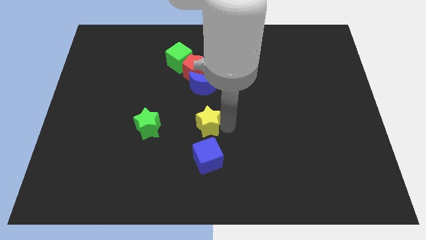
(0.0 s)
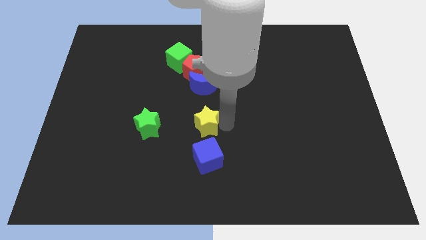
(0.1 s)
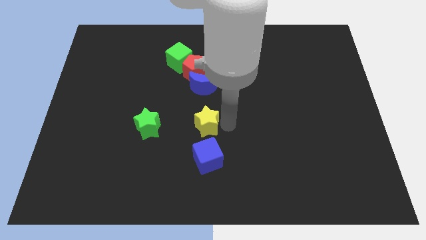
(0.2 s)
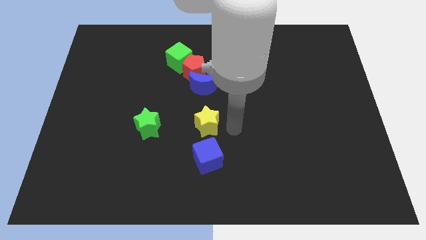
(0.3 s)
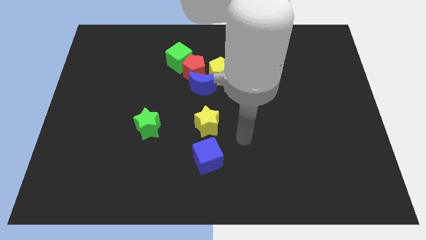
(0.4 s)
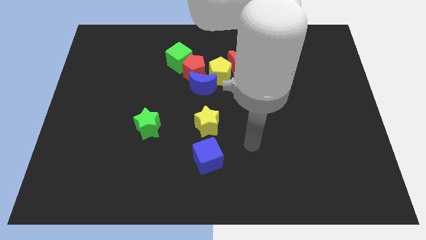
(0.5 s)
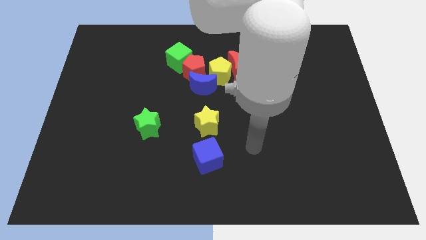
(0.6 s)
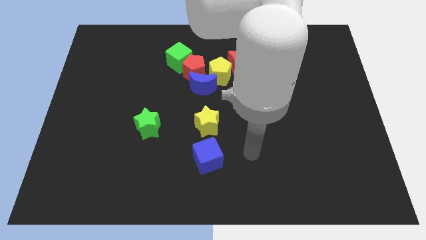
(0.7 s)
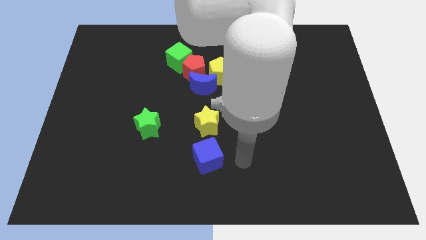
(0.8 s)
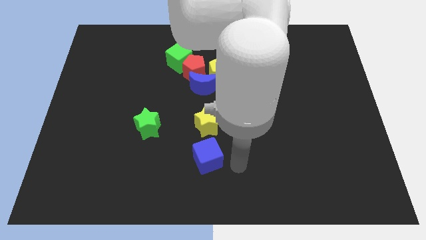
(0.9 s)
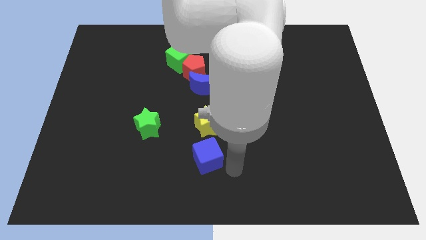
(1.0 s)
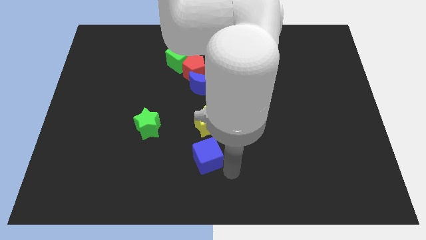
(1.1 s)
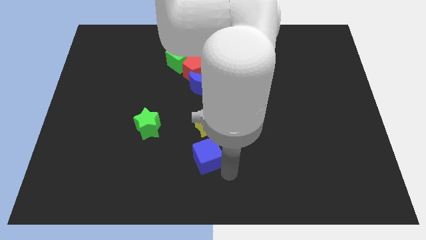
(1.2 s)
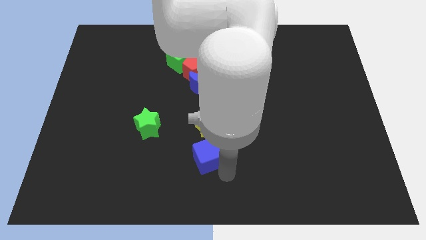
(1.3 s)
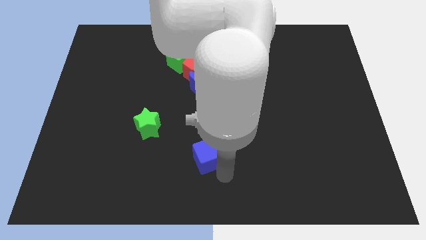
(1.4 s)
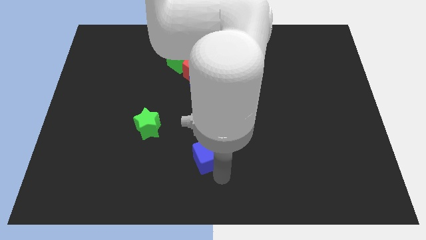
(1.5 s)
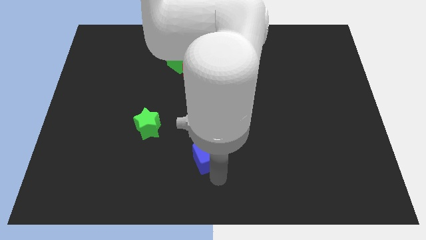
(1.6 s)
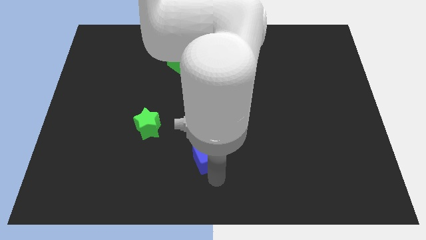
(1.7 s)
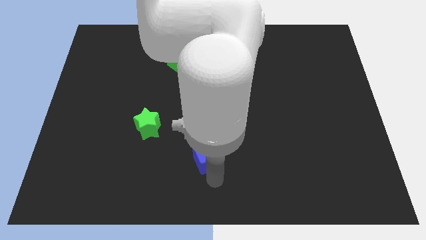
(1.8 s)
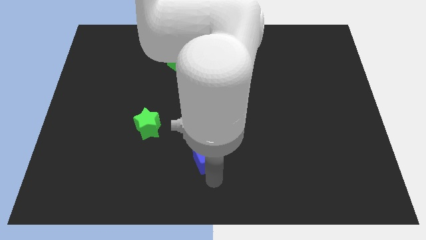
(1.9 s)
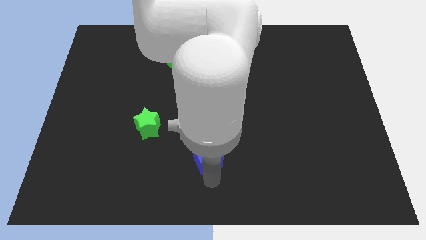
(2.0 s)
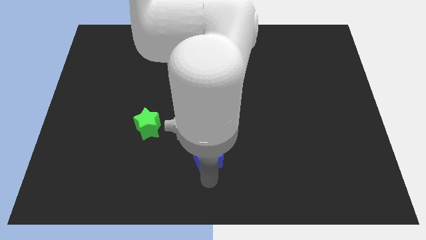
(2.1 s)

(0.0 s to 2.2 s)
move your arm below the blue cube

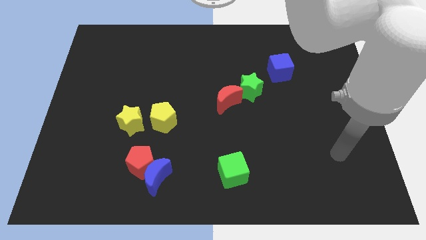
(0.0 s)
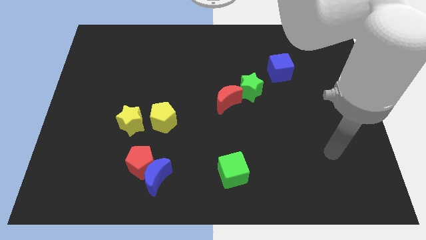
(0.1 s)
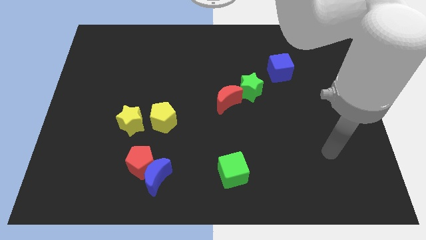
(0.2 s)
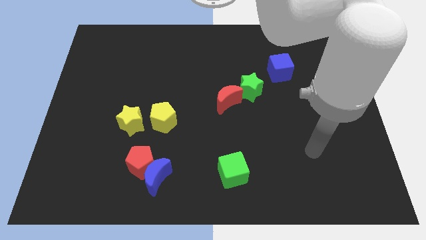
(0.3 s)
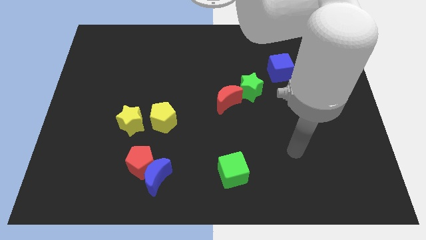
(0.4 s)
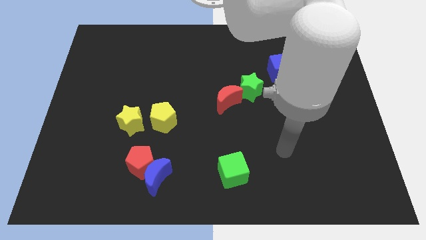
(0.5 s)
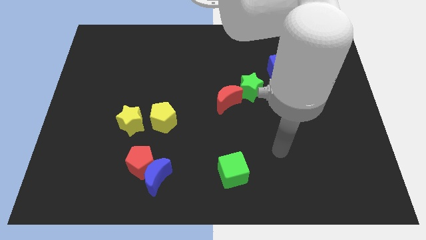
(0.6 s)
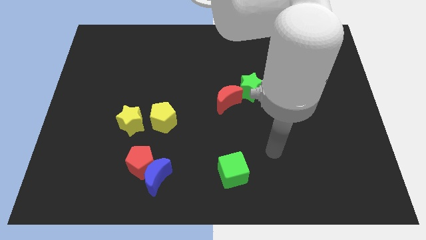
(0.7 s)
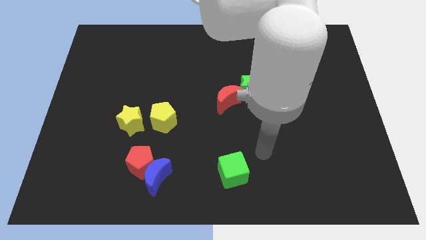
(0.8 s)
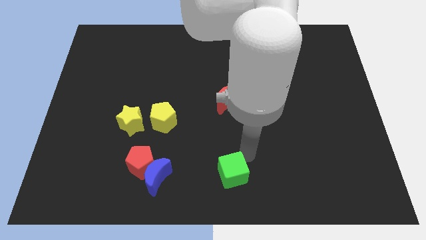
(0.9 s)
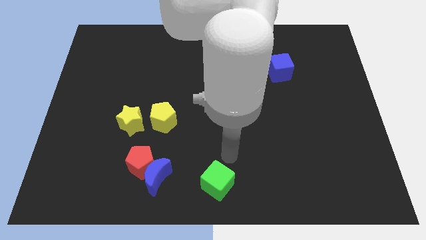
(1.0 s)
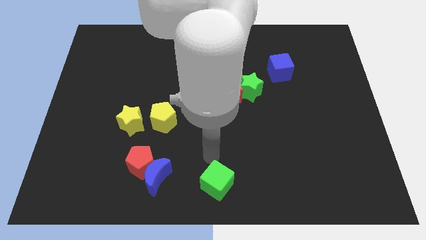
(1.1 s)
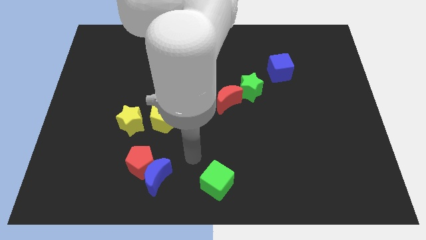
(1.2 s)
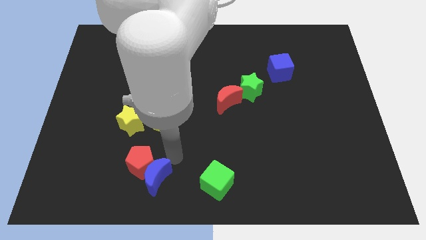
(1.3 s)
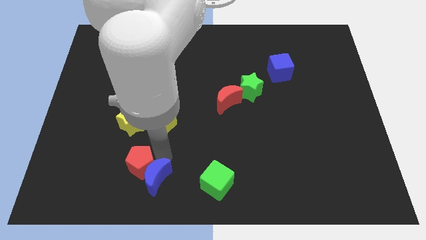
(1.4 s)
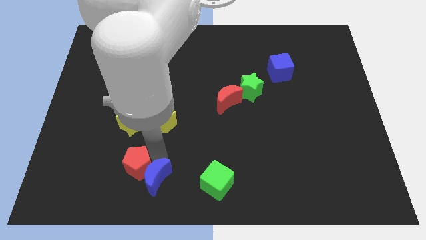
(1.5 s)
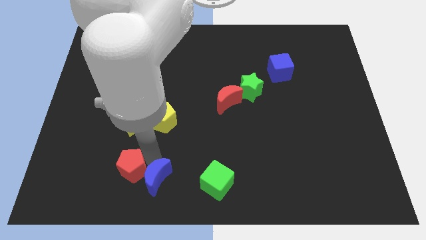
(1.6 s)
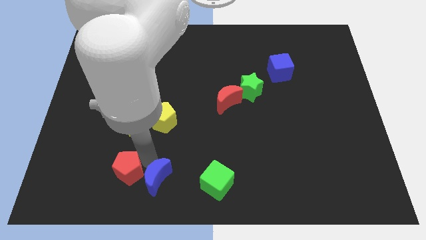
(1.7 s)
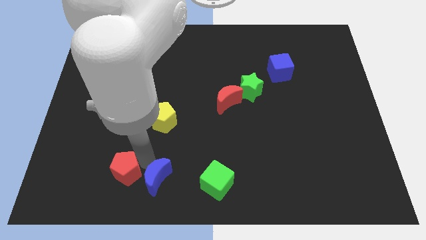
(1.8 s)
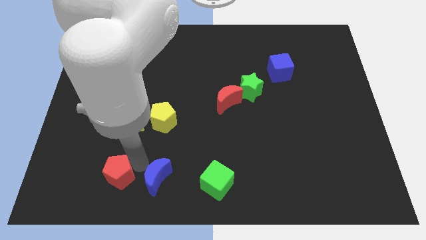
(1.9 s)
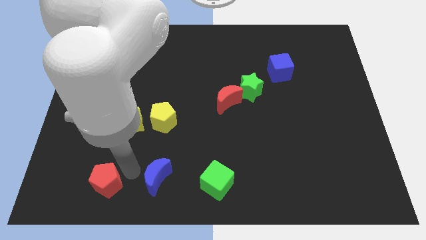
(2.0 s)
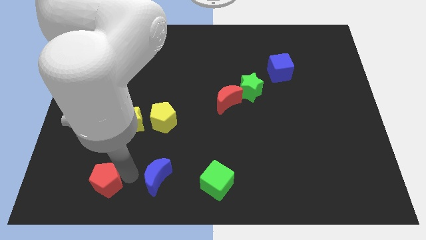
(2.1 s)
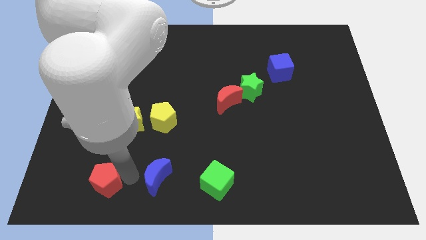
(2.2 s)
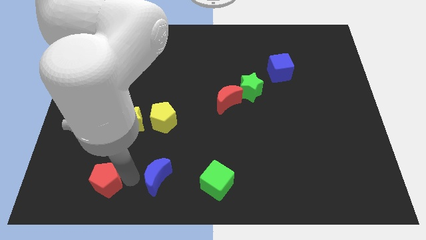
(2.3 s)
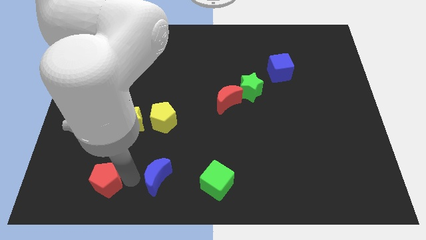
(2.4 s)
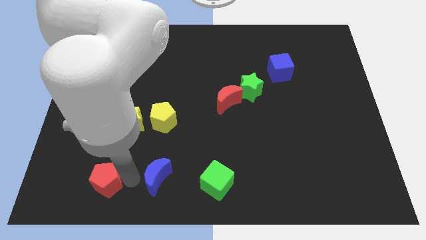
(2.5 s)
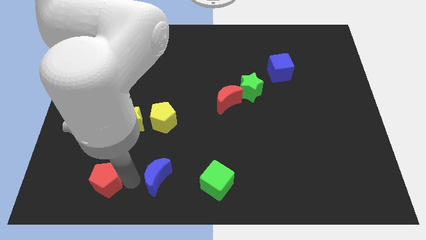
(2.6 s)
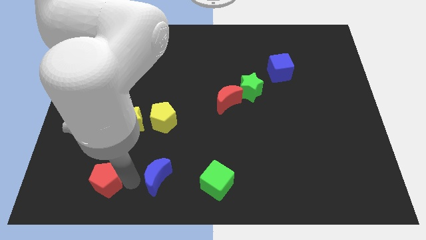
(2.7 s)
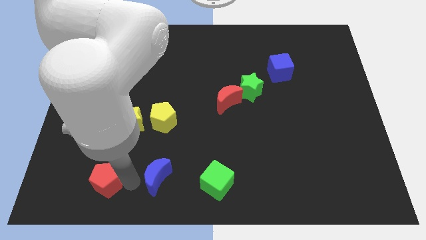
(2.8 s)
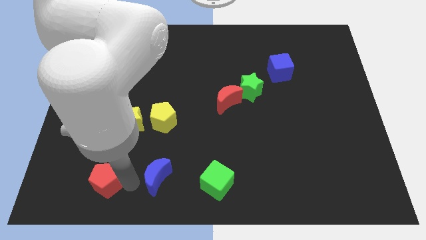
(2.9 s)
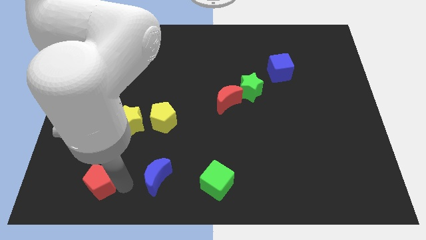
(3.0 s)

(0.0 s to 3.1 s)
push the green cube and the red pentagon downwards diagonally on the left side

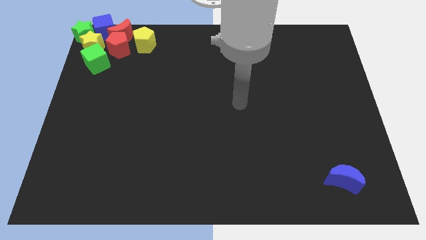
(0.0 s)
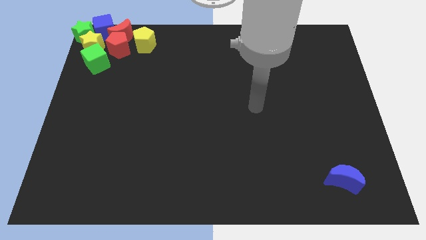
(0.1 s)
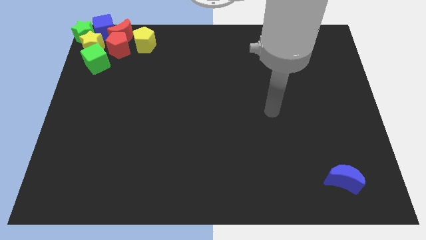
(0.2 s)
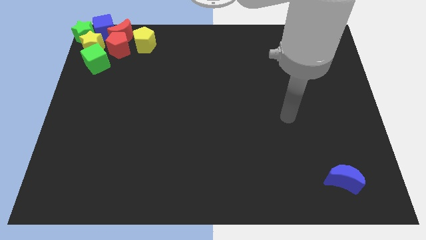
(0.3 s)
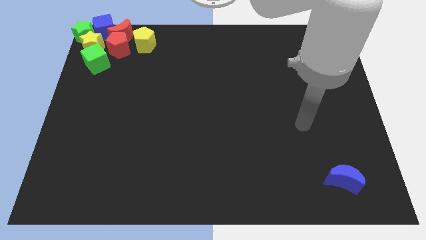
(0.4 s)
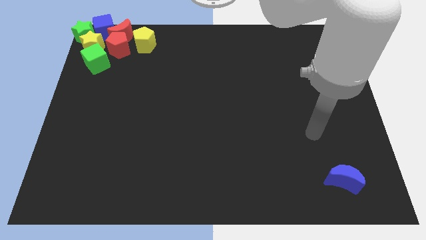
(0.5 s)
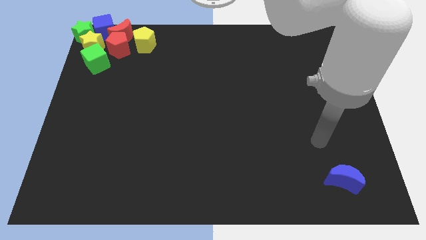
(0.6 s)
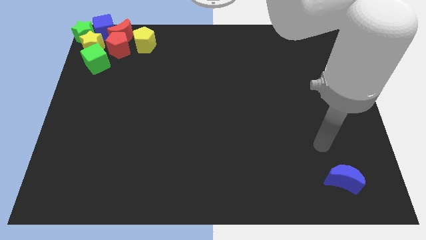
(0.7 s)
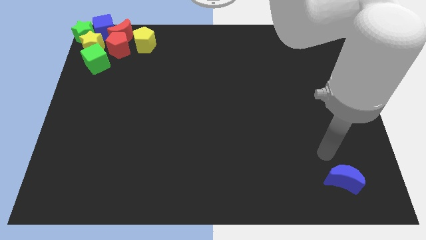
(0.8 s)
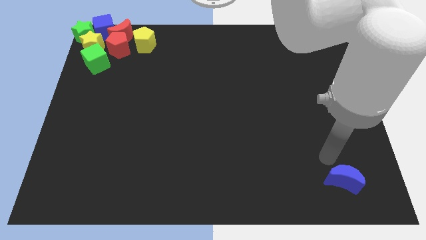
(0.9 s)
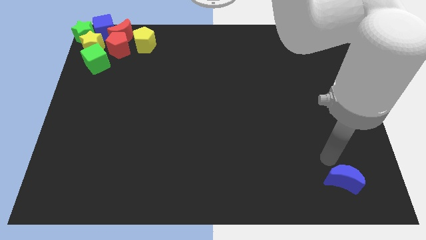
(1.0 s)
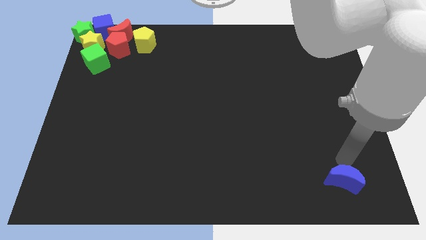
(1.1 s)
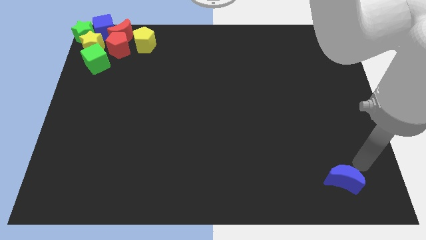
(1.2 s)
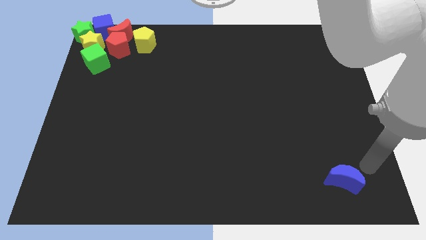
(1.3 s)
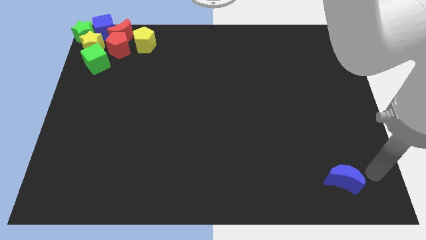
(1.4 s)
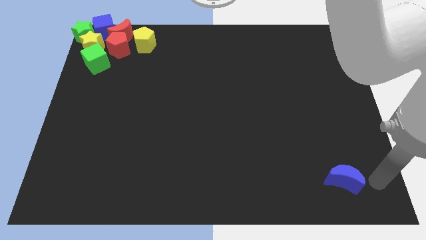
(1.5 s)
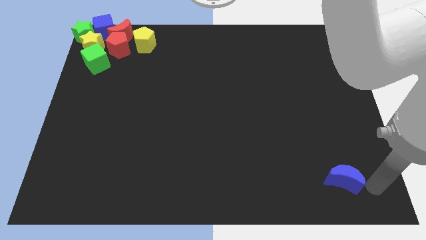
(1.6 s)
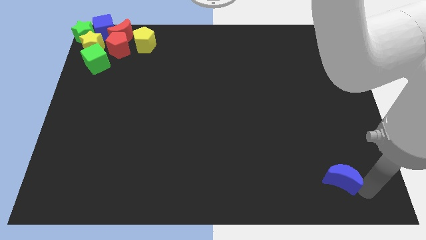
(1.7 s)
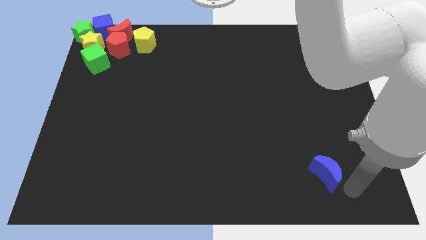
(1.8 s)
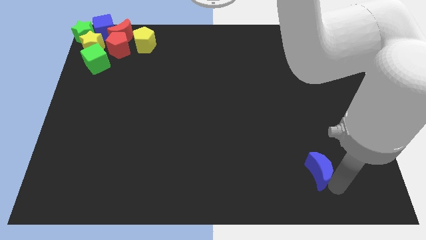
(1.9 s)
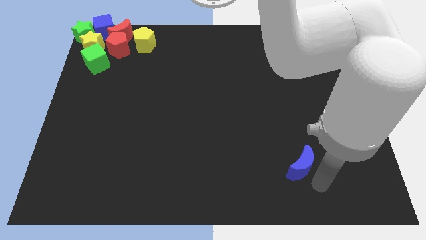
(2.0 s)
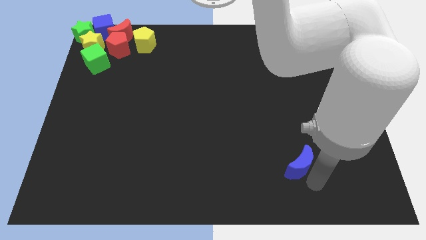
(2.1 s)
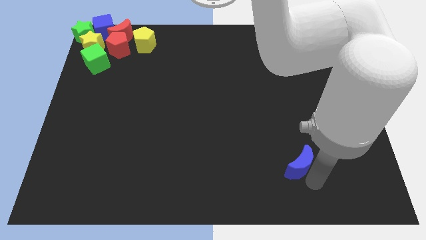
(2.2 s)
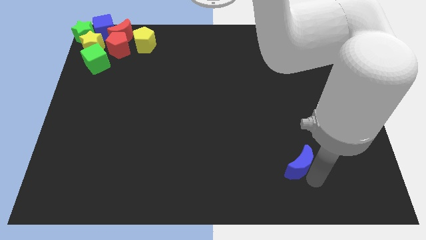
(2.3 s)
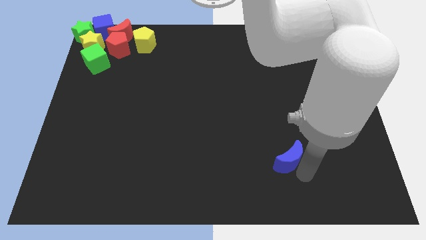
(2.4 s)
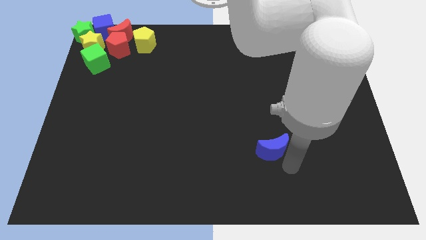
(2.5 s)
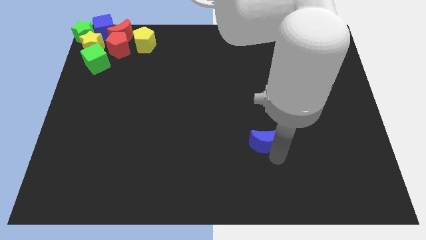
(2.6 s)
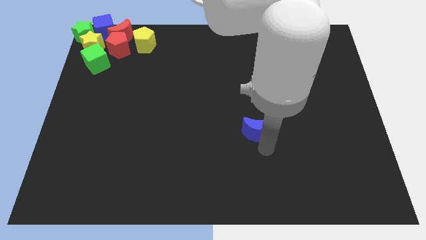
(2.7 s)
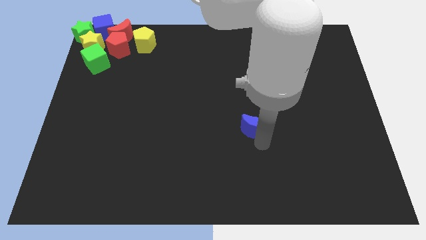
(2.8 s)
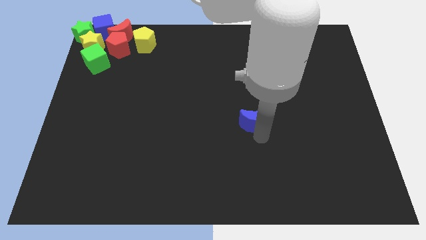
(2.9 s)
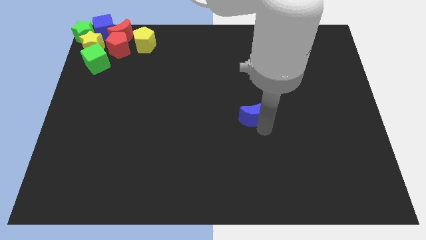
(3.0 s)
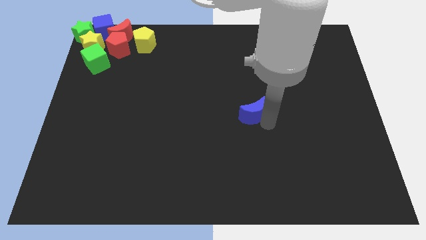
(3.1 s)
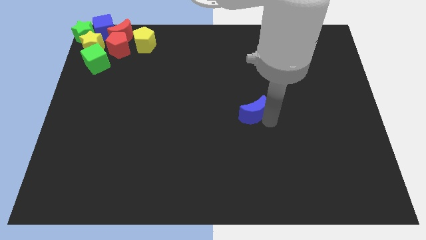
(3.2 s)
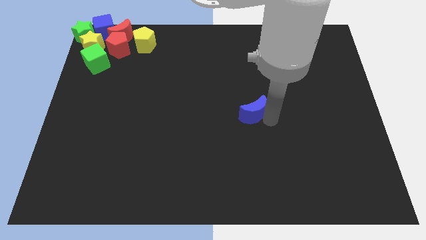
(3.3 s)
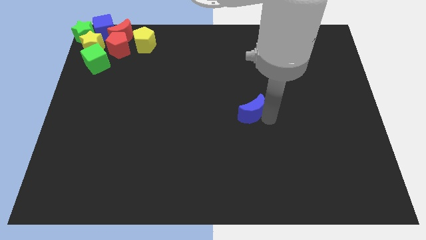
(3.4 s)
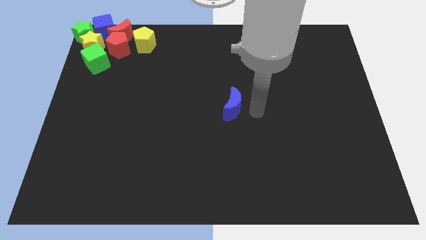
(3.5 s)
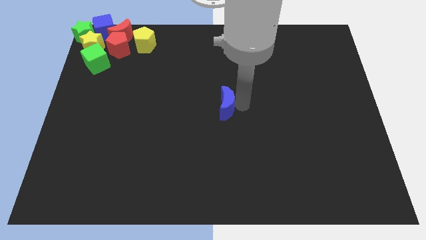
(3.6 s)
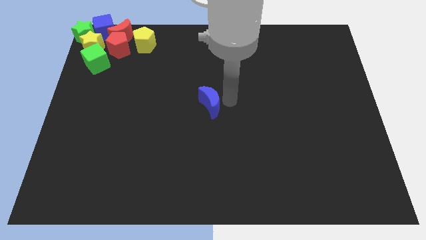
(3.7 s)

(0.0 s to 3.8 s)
move the blue moon to the center
